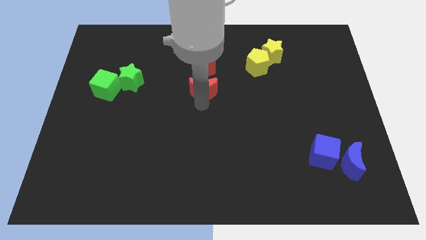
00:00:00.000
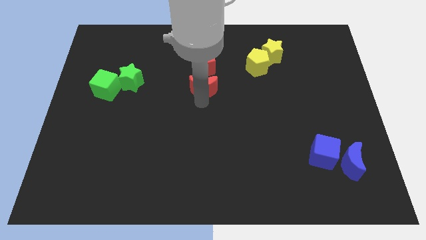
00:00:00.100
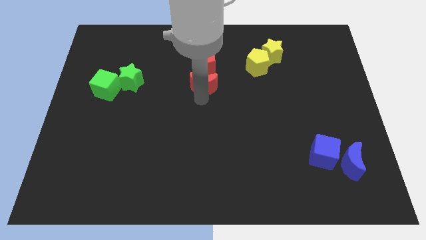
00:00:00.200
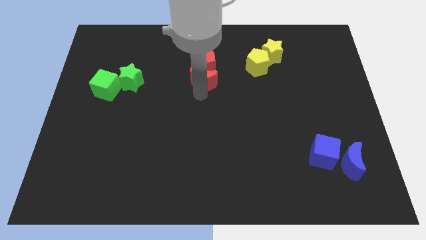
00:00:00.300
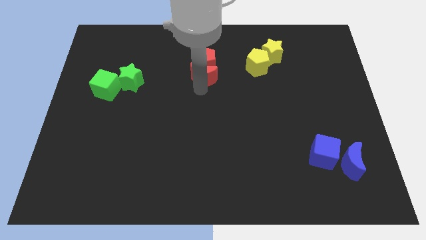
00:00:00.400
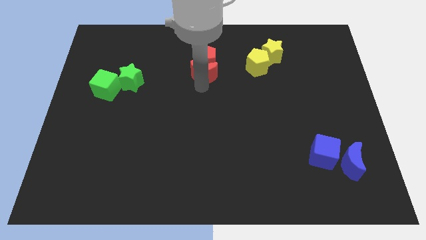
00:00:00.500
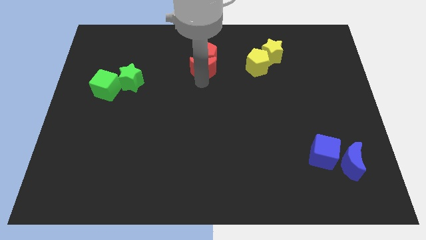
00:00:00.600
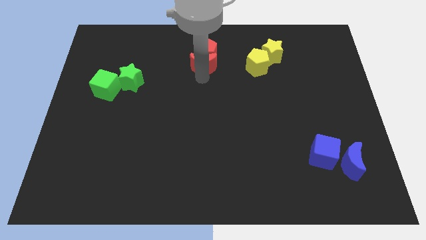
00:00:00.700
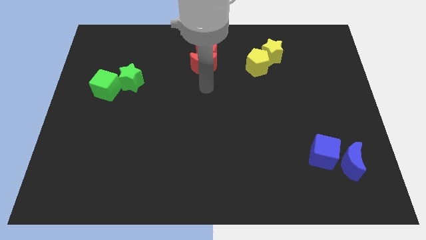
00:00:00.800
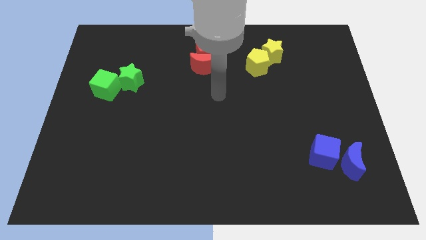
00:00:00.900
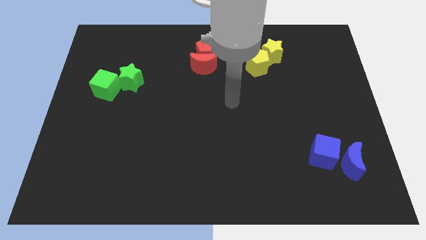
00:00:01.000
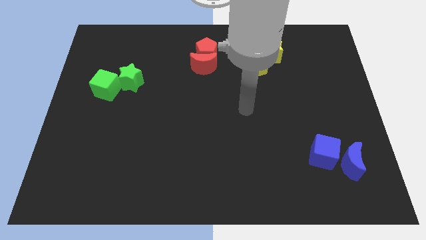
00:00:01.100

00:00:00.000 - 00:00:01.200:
push red pentagon and red moon to the top center of the board

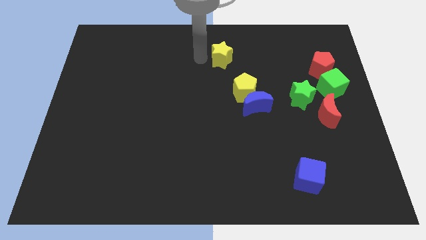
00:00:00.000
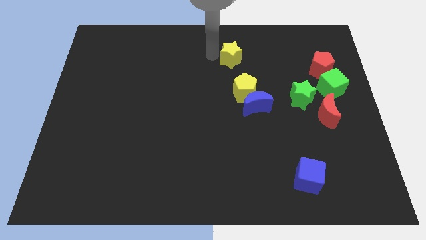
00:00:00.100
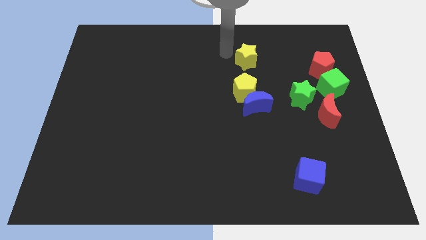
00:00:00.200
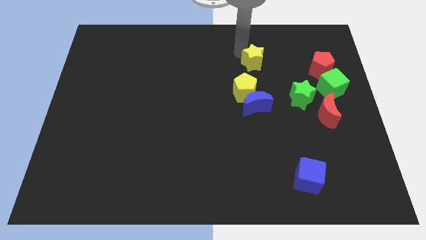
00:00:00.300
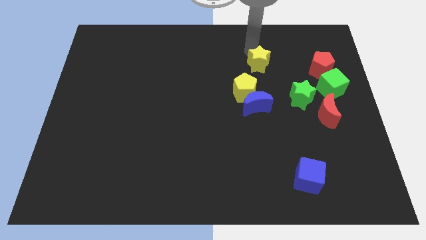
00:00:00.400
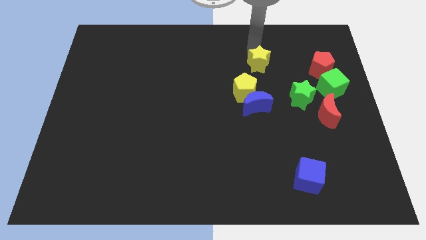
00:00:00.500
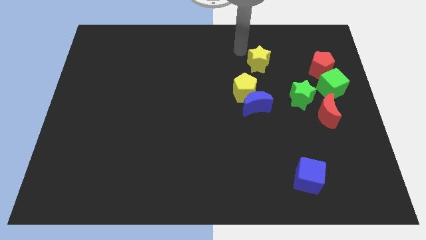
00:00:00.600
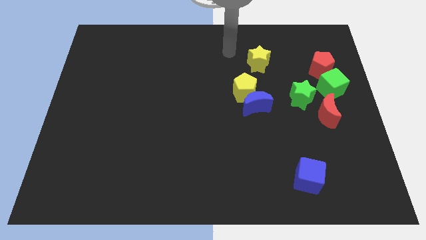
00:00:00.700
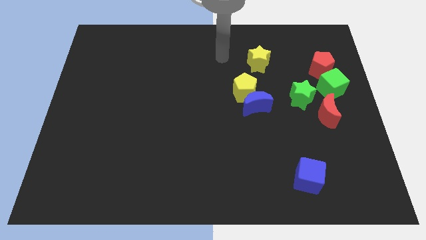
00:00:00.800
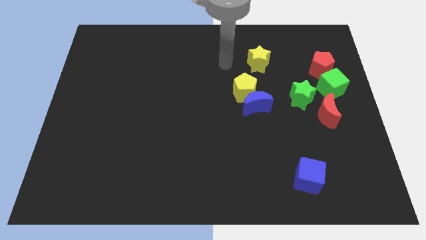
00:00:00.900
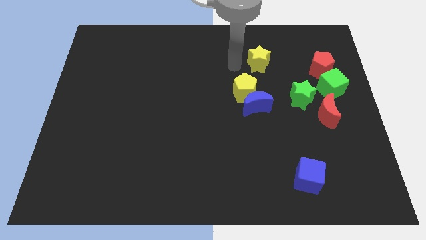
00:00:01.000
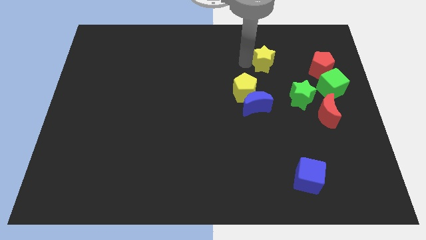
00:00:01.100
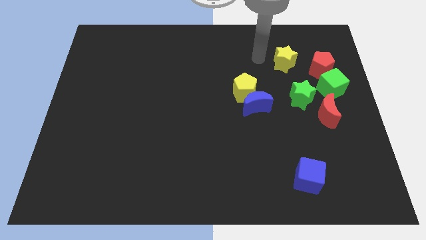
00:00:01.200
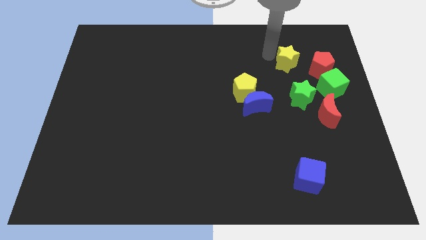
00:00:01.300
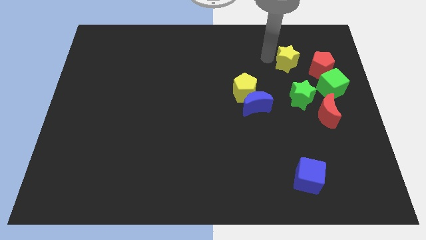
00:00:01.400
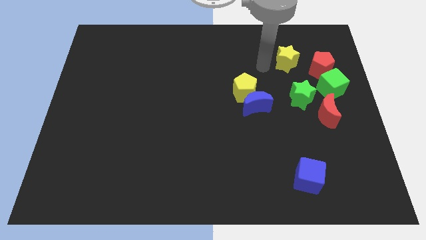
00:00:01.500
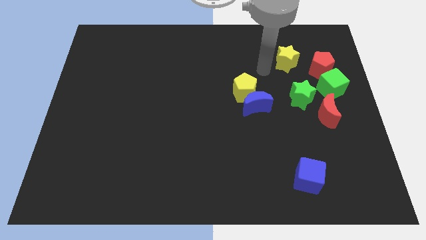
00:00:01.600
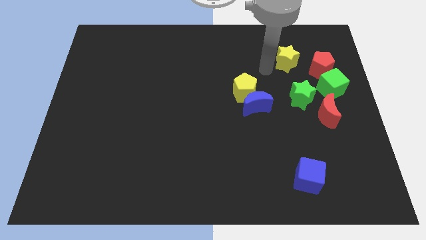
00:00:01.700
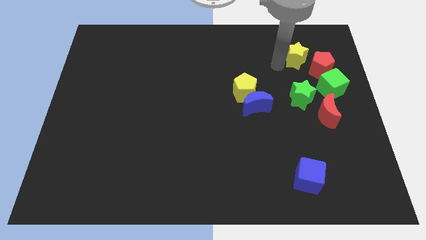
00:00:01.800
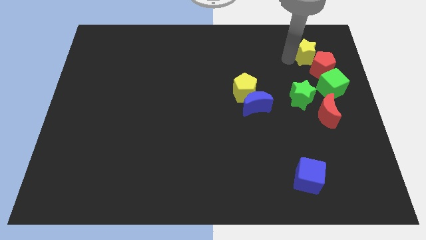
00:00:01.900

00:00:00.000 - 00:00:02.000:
place the yellow star close to red pentagon

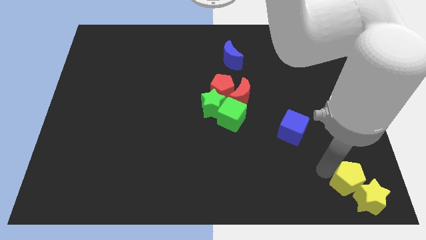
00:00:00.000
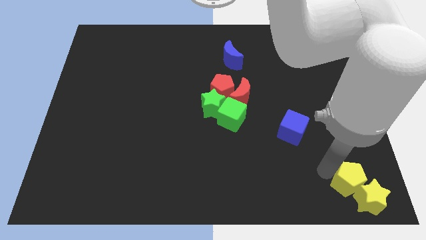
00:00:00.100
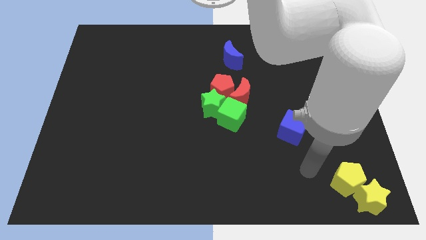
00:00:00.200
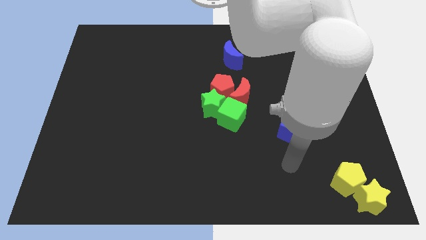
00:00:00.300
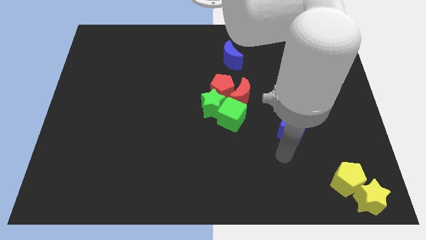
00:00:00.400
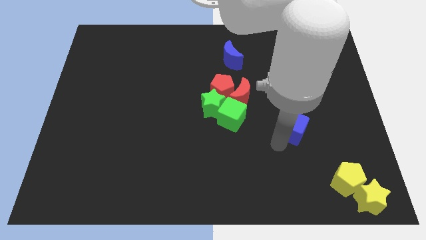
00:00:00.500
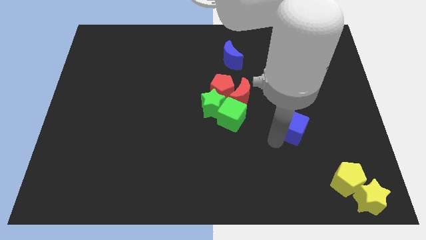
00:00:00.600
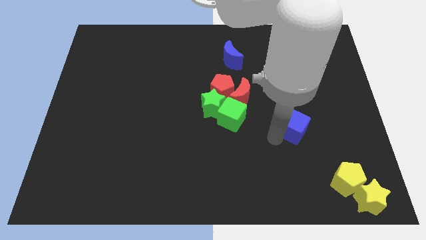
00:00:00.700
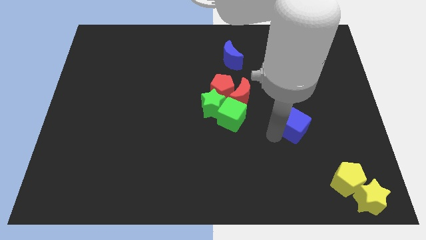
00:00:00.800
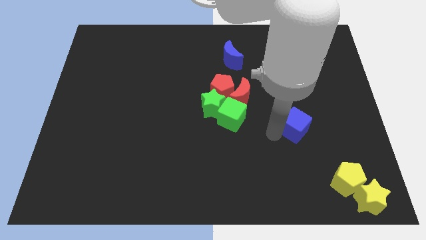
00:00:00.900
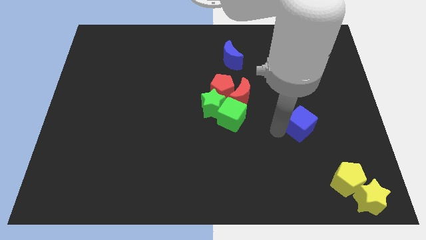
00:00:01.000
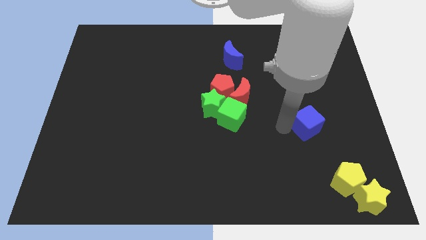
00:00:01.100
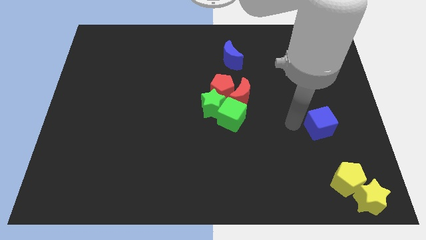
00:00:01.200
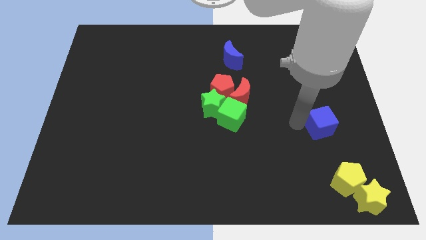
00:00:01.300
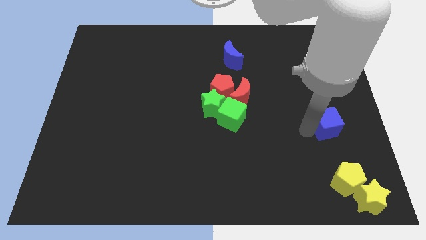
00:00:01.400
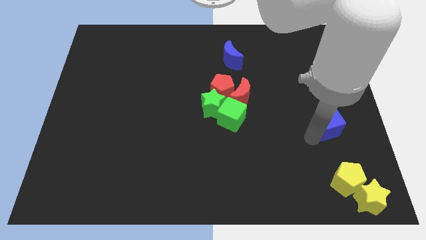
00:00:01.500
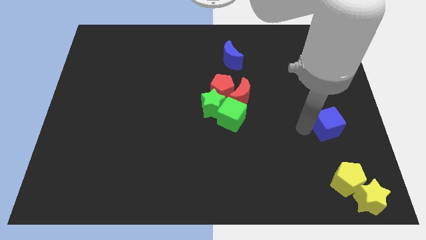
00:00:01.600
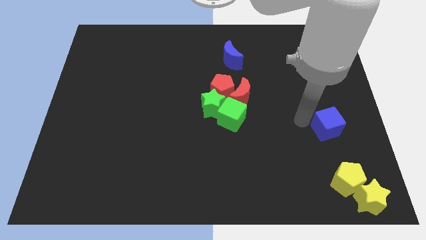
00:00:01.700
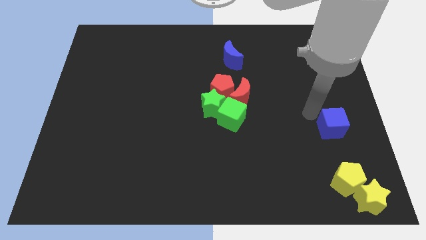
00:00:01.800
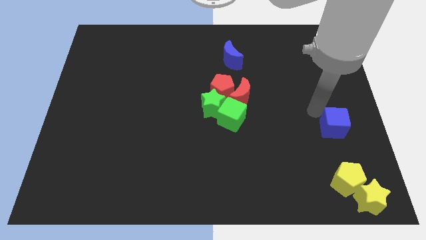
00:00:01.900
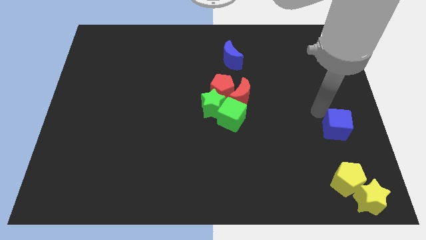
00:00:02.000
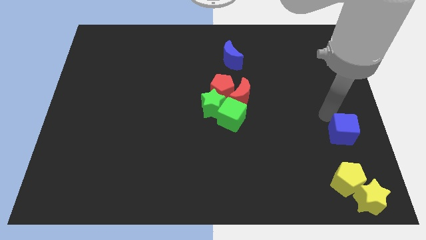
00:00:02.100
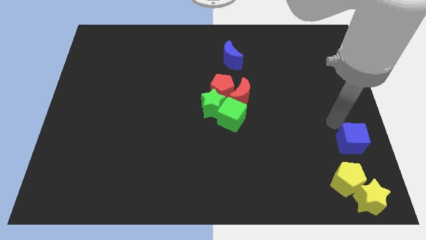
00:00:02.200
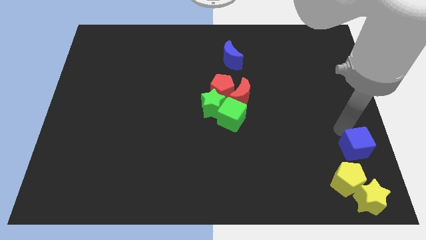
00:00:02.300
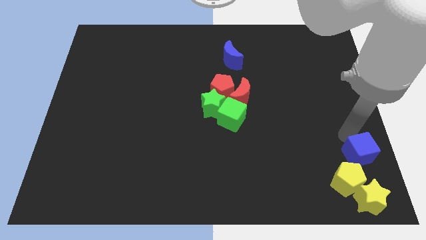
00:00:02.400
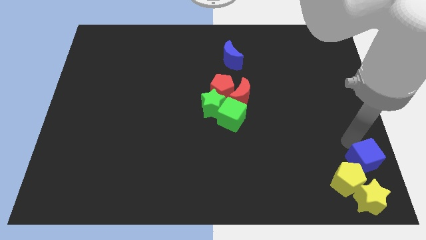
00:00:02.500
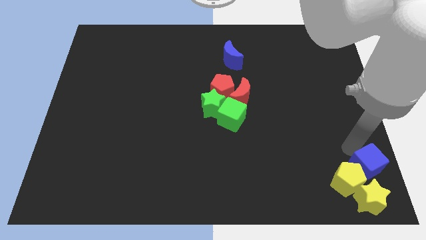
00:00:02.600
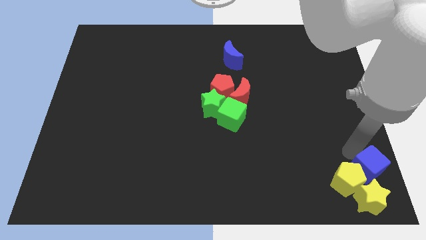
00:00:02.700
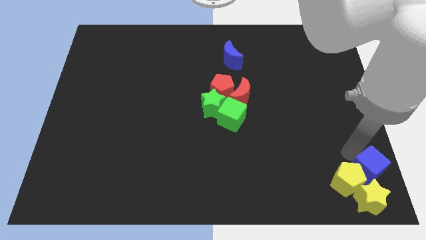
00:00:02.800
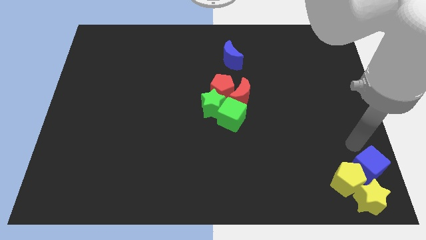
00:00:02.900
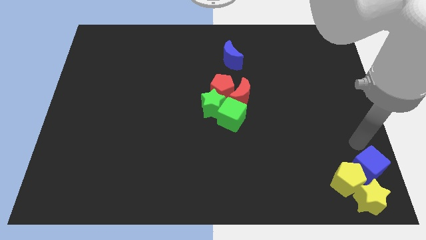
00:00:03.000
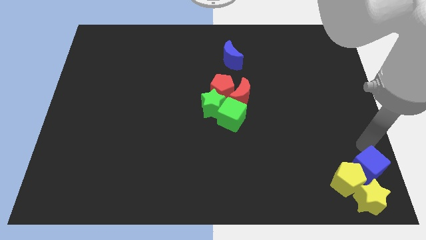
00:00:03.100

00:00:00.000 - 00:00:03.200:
place the blue cube above the yellow pentagon

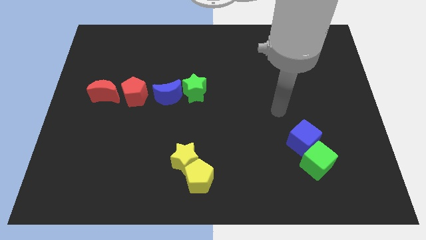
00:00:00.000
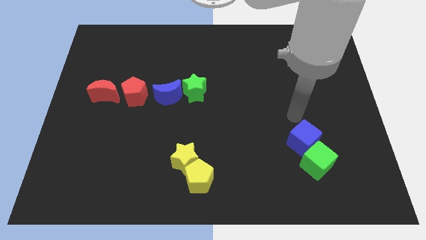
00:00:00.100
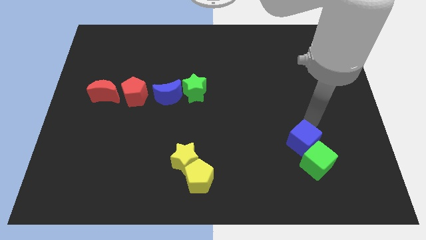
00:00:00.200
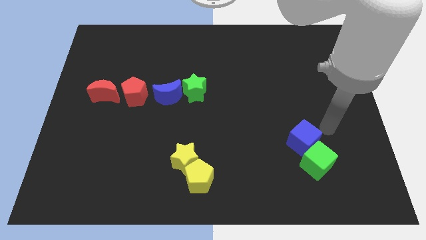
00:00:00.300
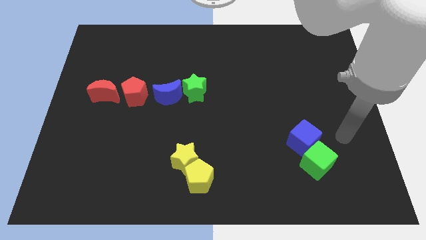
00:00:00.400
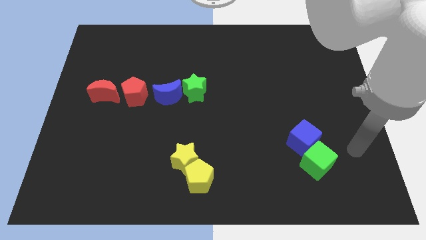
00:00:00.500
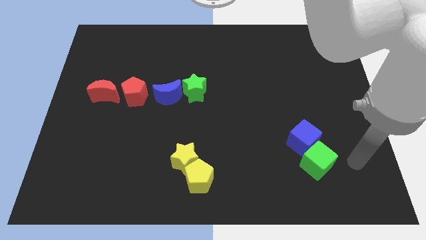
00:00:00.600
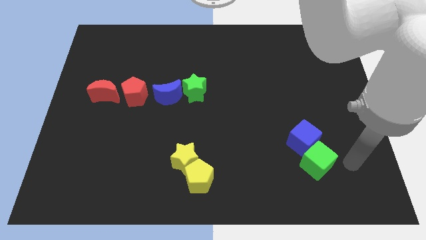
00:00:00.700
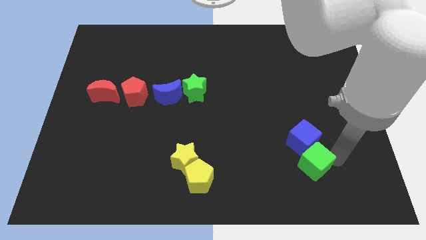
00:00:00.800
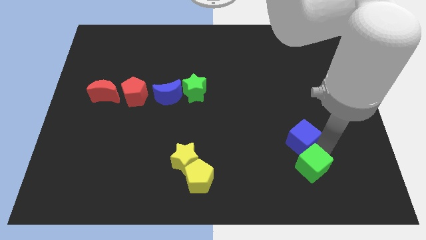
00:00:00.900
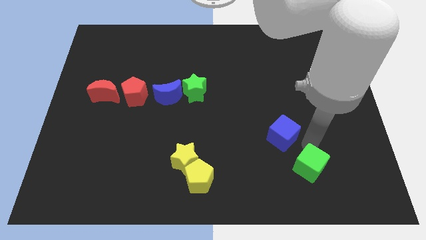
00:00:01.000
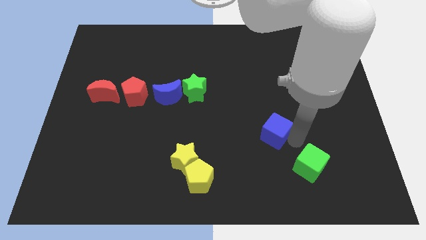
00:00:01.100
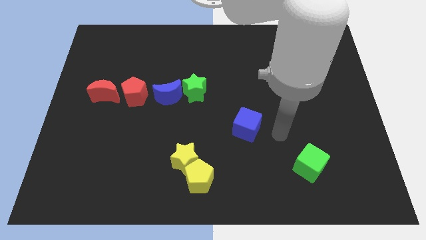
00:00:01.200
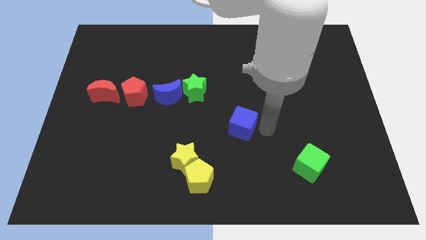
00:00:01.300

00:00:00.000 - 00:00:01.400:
place blue cube diagonally top right to the yellow star

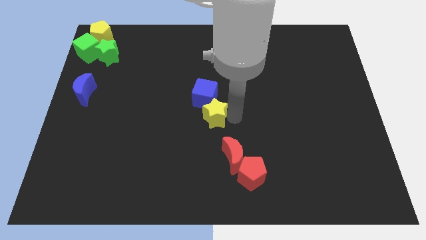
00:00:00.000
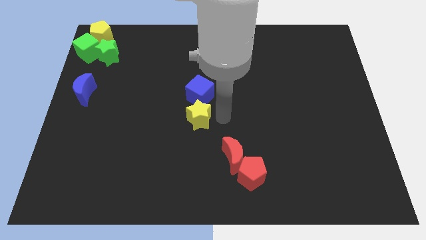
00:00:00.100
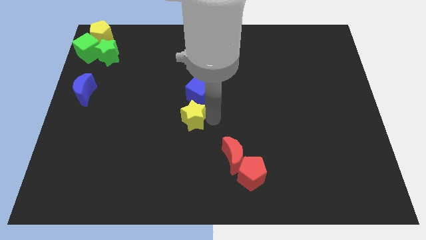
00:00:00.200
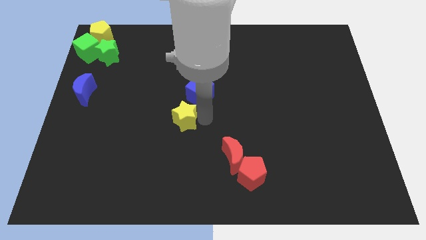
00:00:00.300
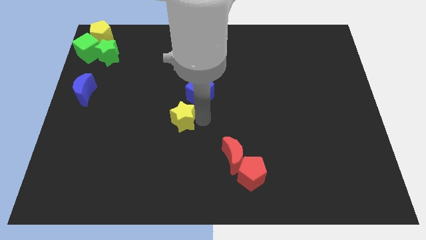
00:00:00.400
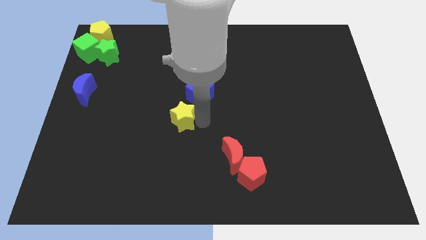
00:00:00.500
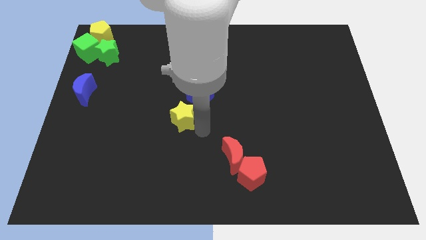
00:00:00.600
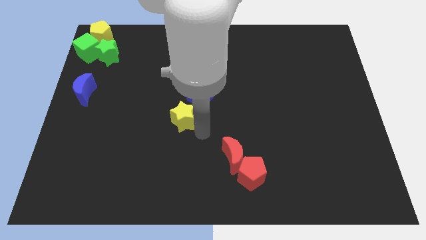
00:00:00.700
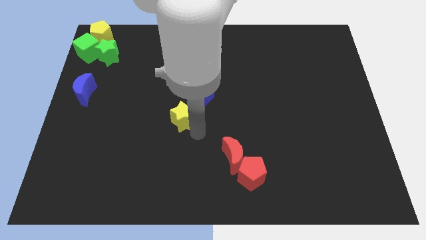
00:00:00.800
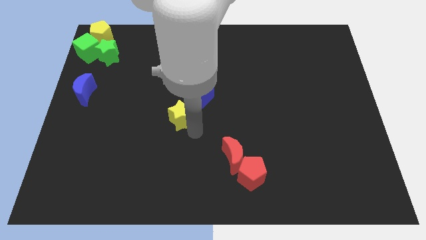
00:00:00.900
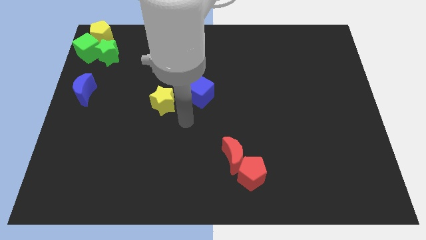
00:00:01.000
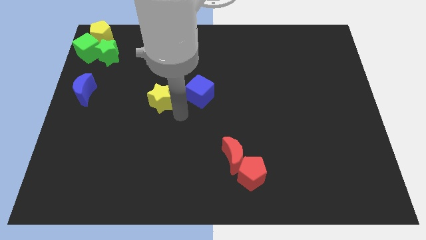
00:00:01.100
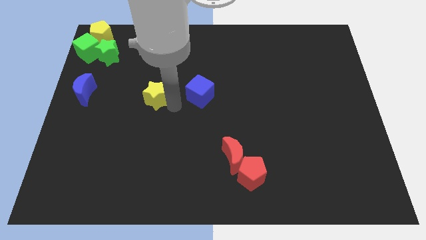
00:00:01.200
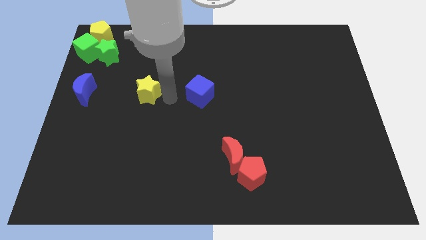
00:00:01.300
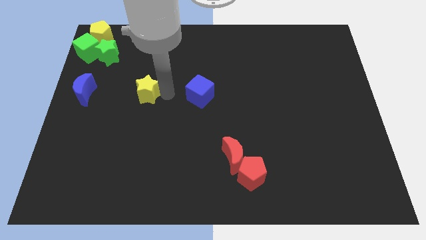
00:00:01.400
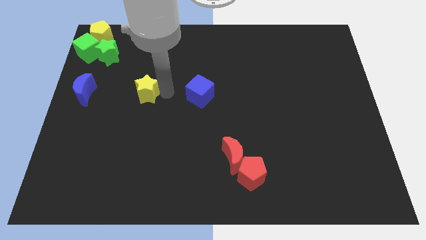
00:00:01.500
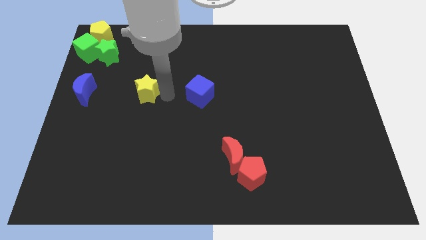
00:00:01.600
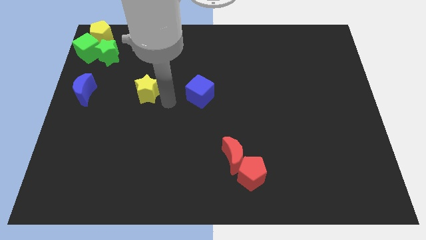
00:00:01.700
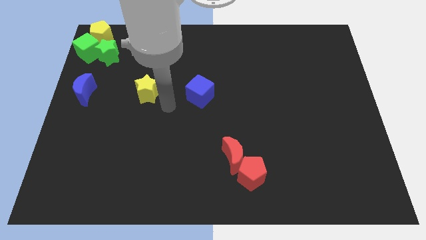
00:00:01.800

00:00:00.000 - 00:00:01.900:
place the yellow star in between the blue moon and blue cube
